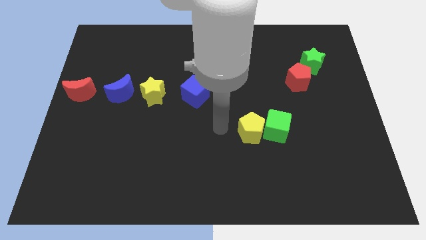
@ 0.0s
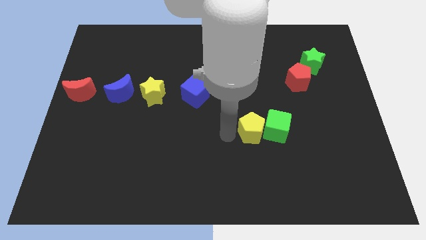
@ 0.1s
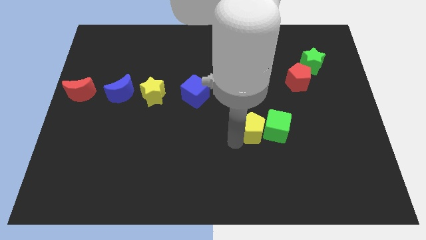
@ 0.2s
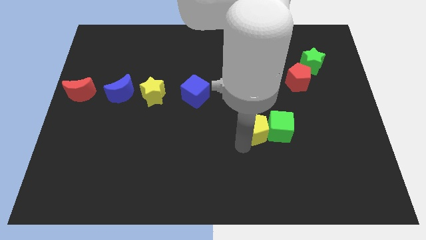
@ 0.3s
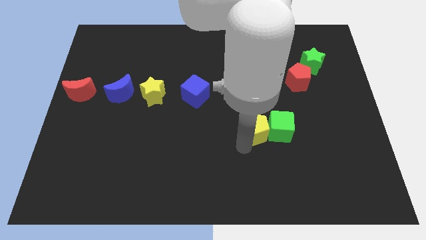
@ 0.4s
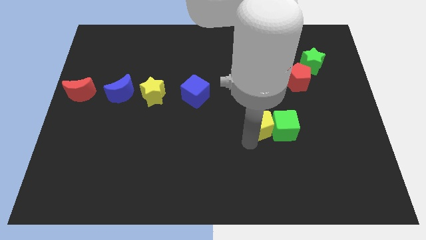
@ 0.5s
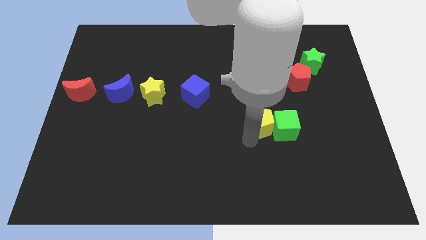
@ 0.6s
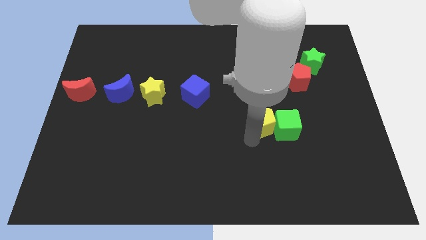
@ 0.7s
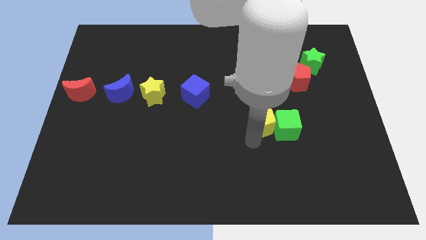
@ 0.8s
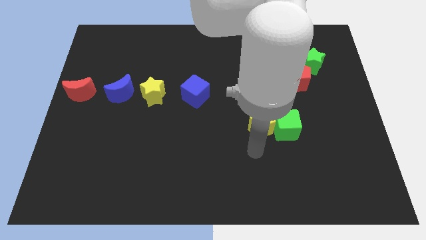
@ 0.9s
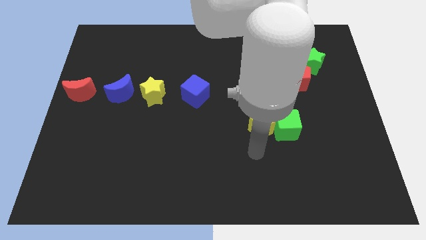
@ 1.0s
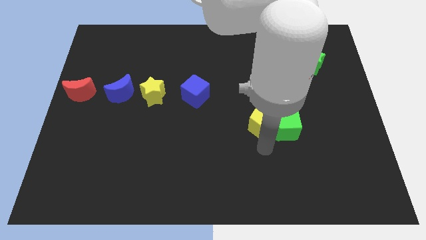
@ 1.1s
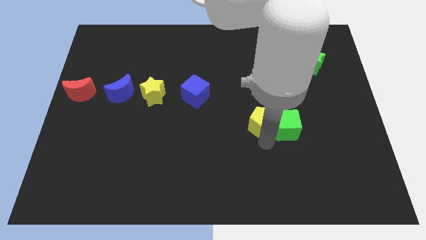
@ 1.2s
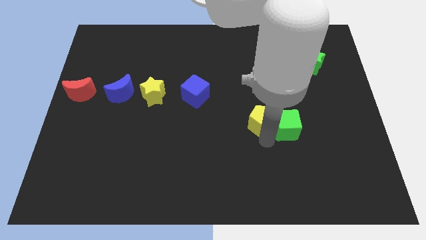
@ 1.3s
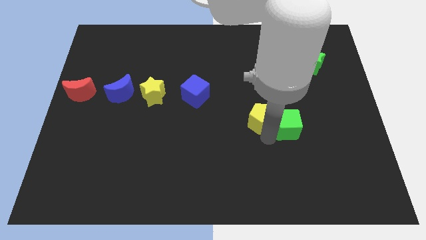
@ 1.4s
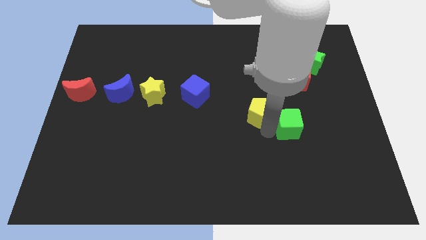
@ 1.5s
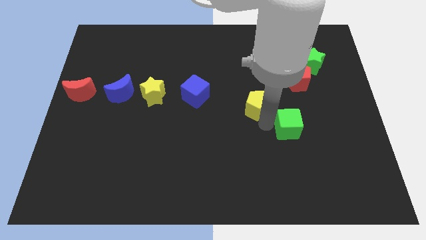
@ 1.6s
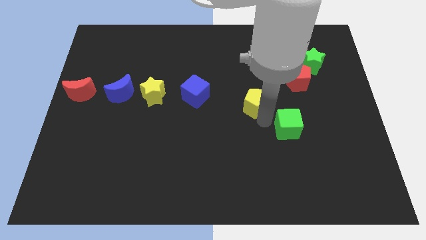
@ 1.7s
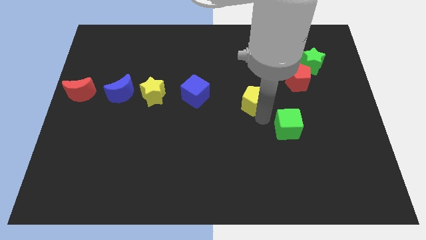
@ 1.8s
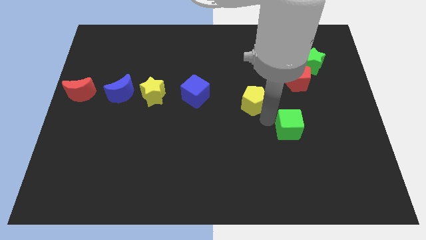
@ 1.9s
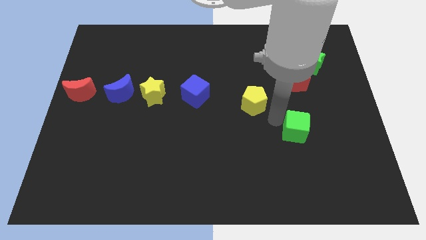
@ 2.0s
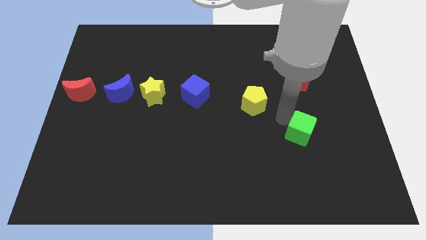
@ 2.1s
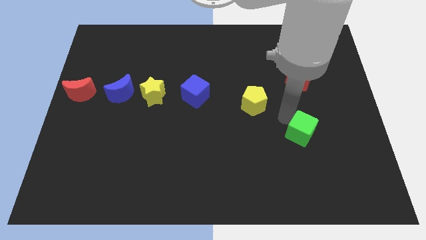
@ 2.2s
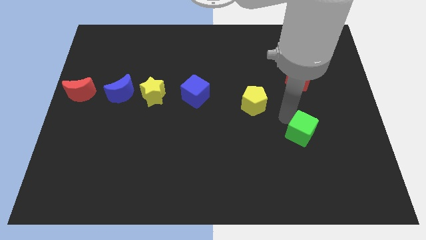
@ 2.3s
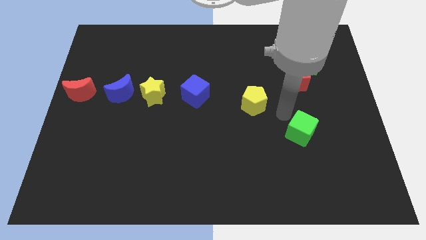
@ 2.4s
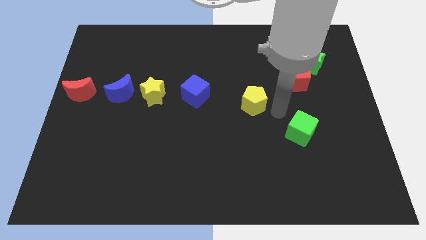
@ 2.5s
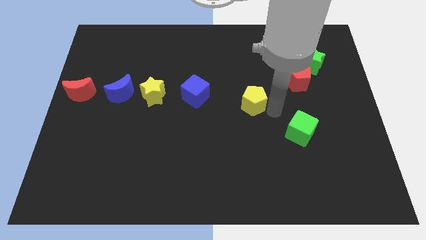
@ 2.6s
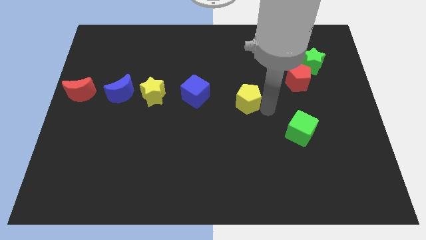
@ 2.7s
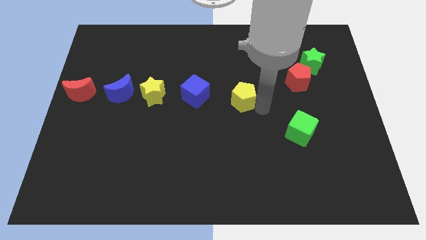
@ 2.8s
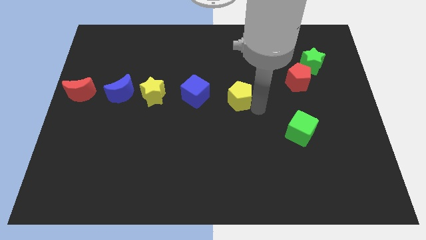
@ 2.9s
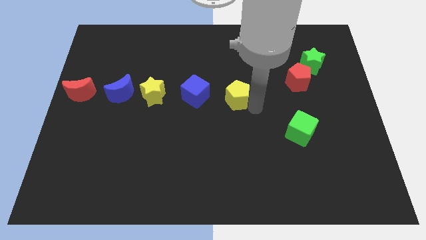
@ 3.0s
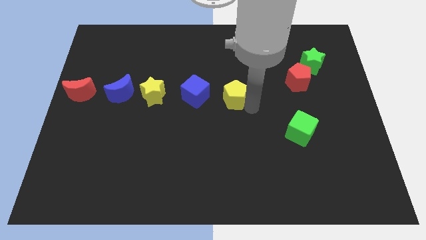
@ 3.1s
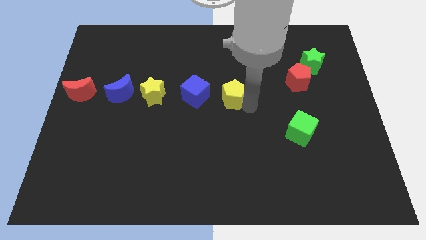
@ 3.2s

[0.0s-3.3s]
place the yellow pentagon to the right of the blue cube

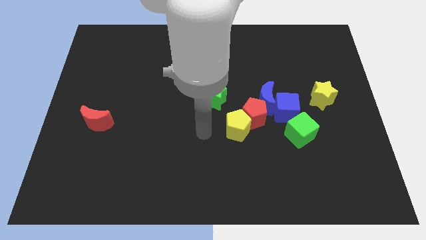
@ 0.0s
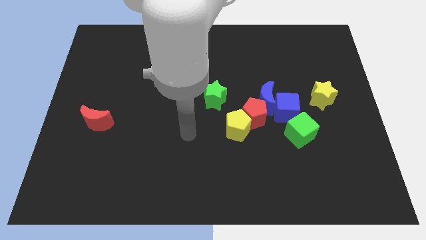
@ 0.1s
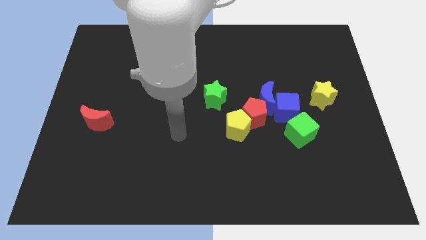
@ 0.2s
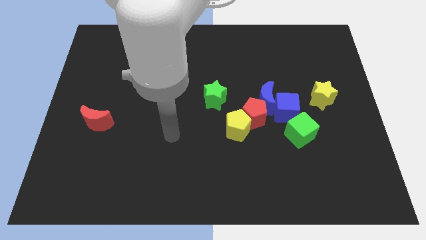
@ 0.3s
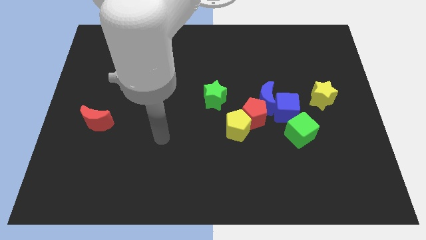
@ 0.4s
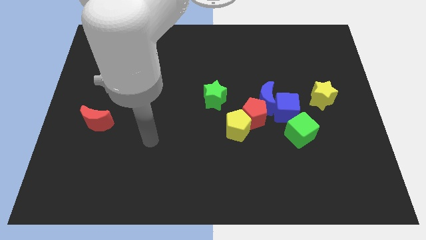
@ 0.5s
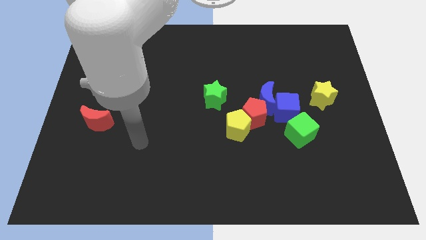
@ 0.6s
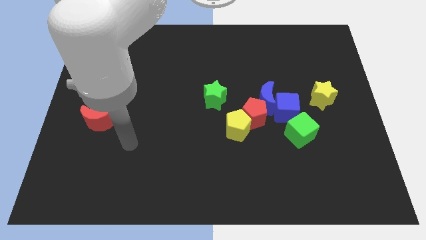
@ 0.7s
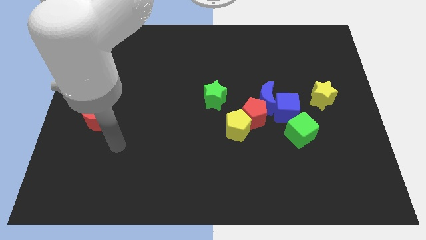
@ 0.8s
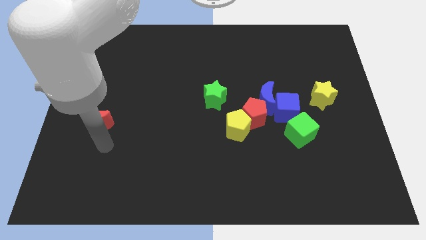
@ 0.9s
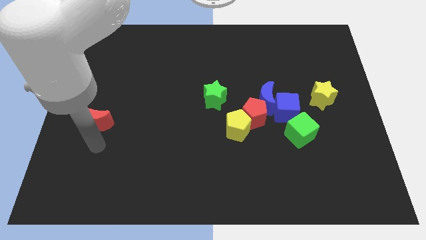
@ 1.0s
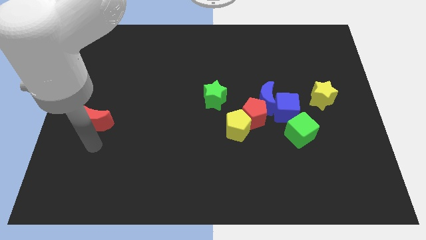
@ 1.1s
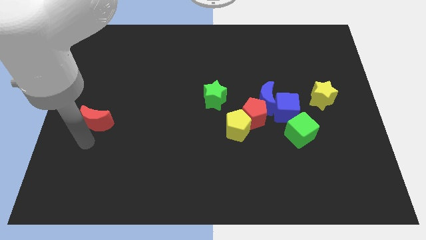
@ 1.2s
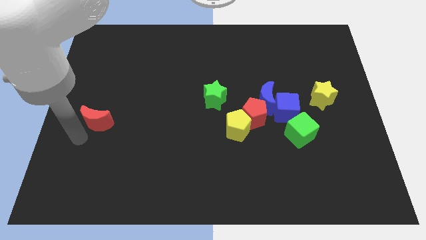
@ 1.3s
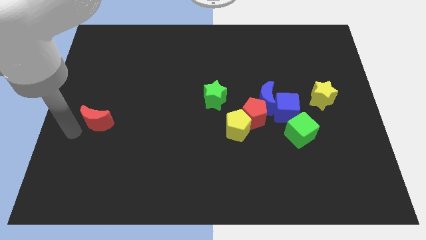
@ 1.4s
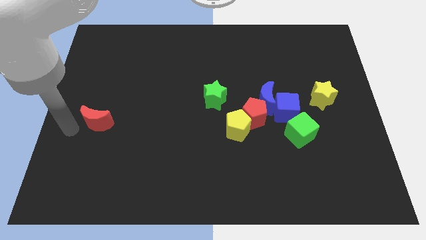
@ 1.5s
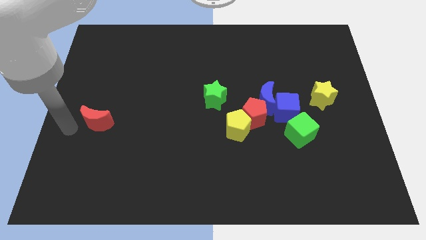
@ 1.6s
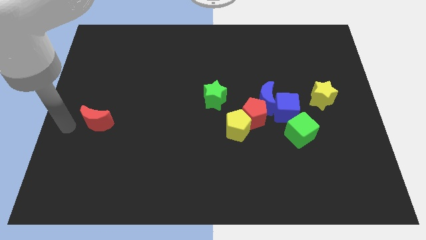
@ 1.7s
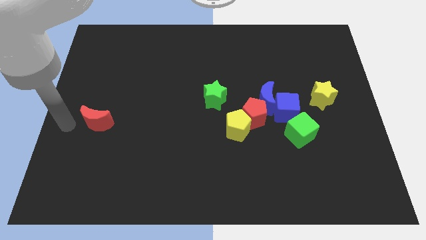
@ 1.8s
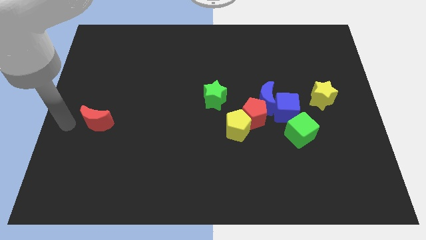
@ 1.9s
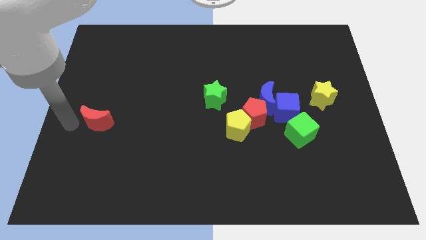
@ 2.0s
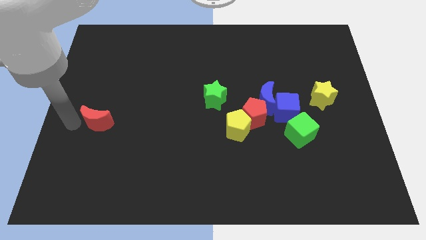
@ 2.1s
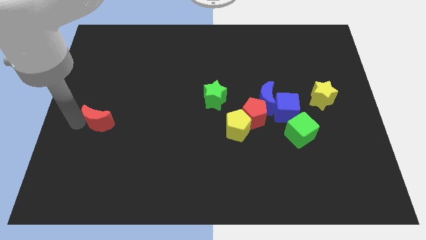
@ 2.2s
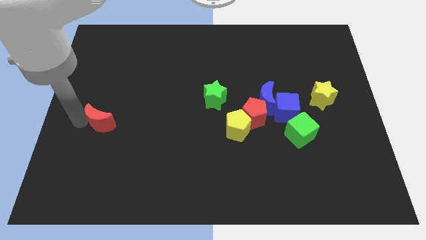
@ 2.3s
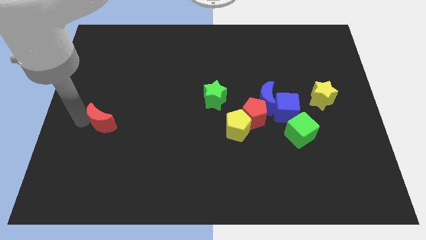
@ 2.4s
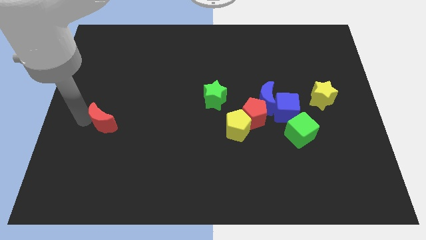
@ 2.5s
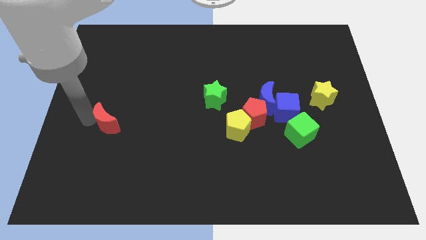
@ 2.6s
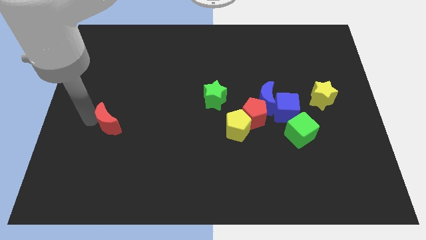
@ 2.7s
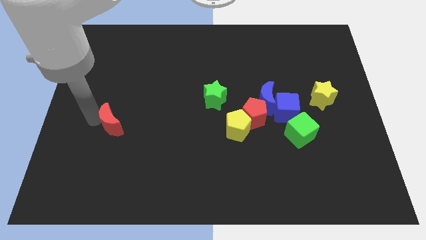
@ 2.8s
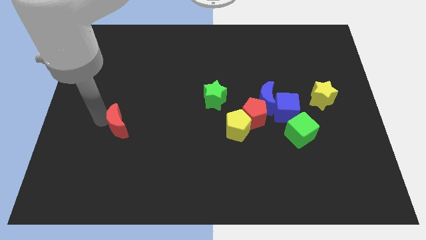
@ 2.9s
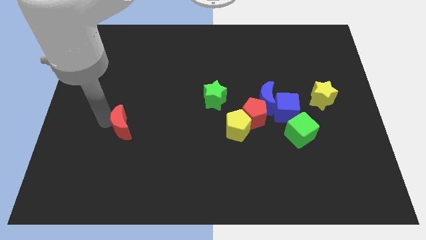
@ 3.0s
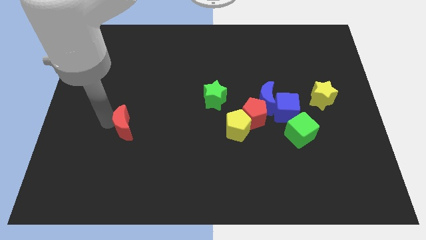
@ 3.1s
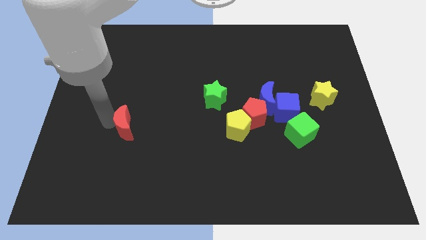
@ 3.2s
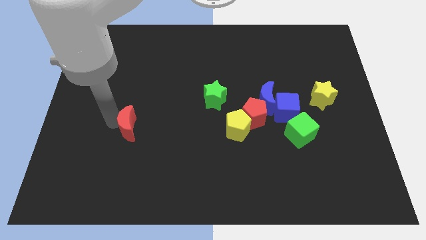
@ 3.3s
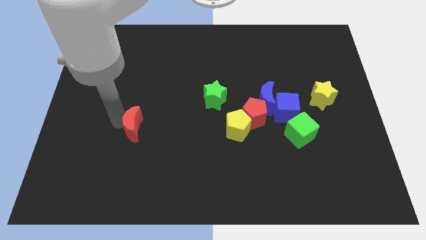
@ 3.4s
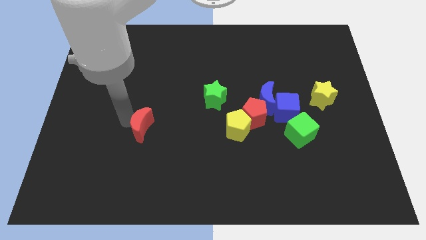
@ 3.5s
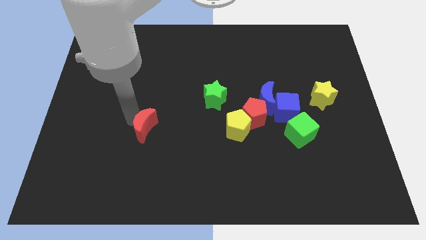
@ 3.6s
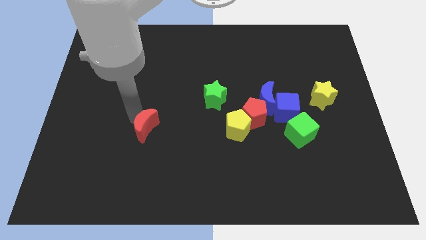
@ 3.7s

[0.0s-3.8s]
push the red moon horizontally to the left side of the yellow pentagon

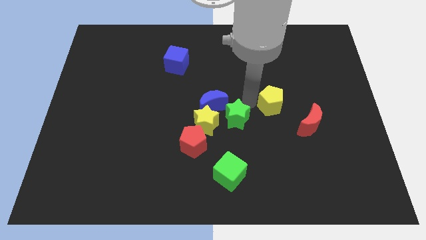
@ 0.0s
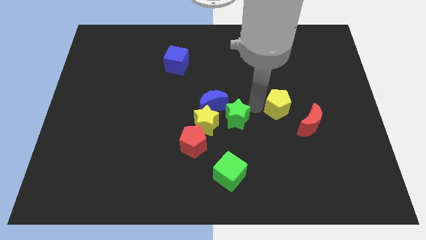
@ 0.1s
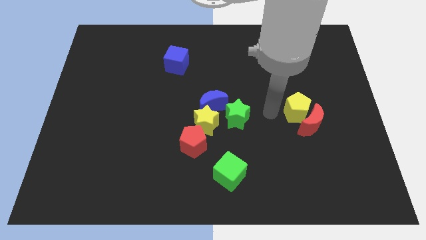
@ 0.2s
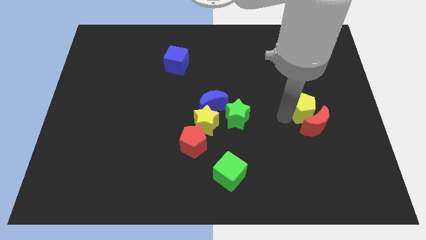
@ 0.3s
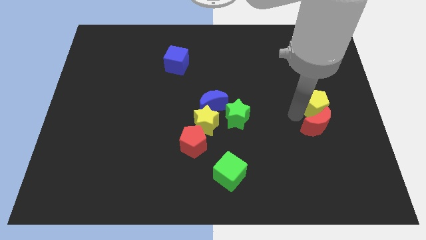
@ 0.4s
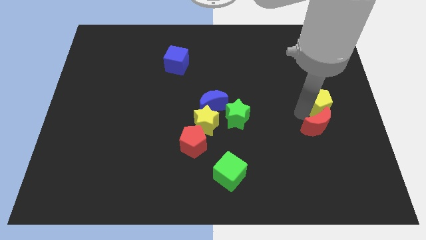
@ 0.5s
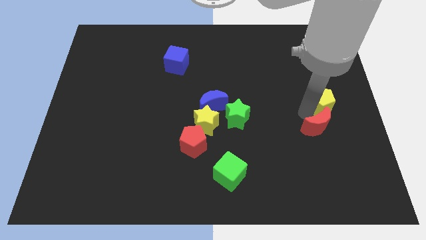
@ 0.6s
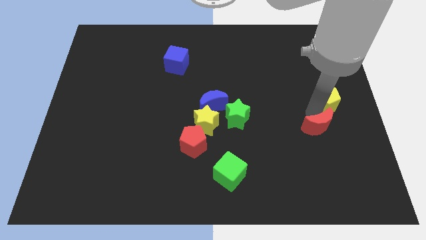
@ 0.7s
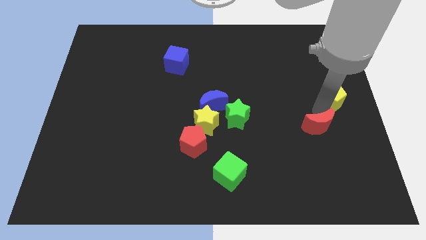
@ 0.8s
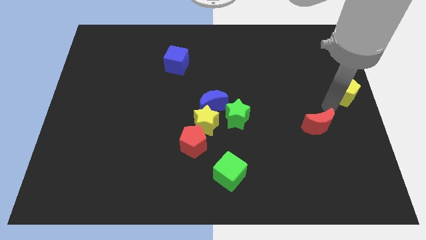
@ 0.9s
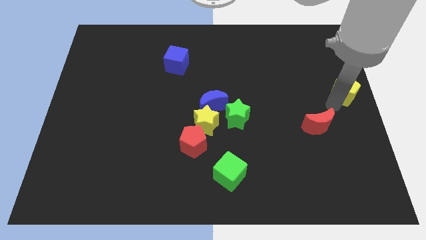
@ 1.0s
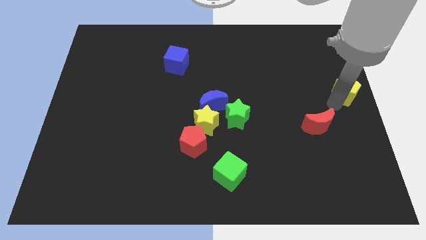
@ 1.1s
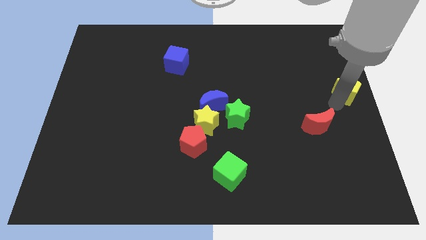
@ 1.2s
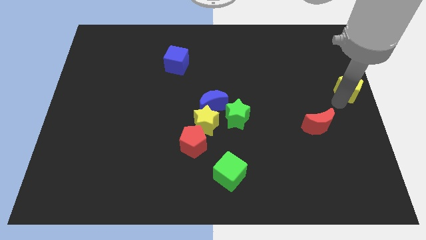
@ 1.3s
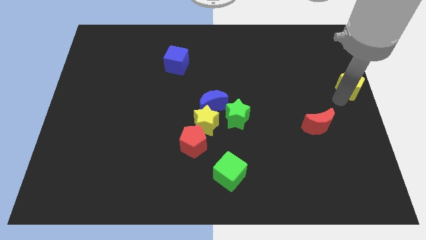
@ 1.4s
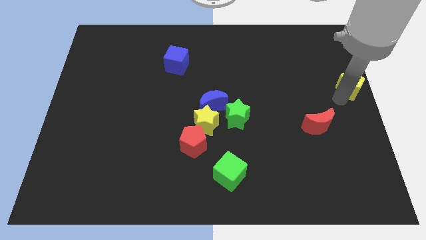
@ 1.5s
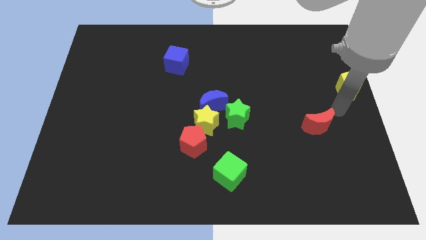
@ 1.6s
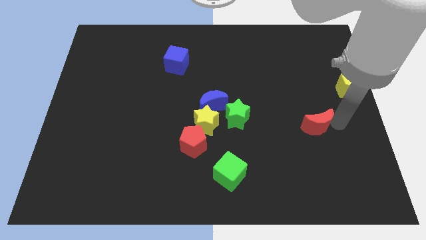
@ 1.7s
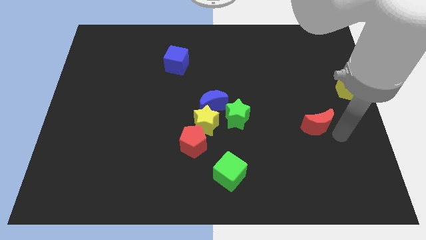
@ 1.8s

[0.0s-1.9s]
move the yellow pentagon to the top right of the red crescent
